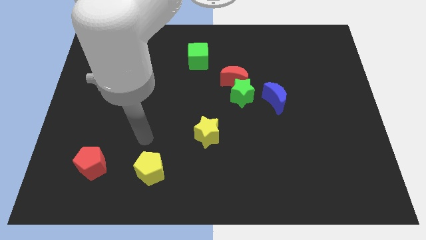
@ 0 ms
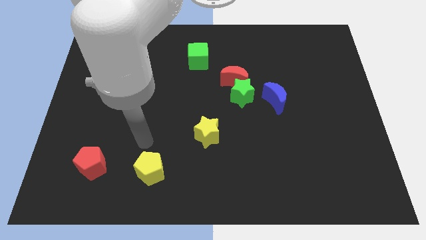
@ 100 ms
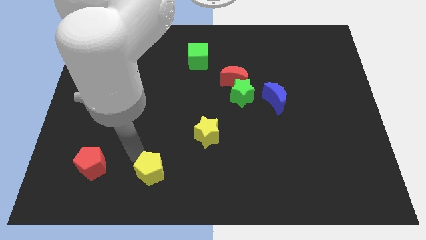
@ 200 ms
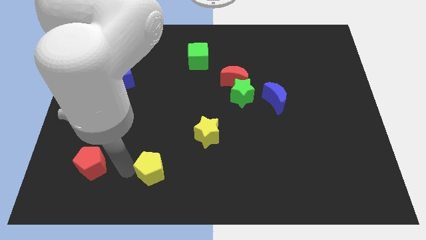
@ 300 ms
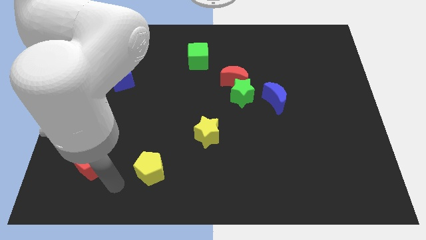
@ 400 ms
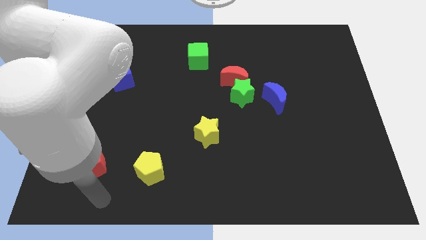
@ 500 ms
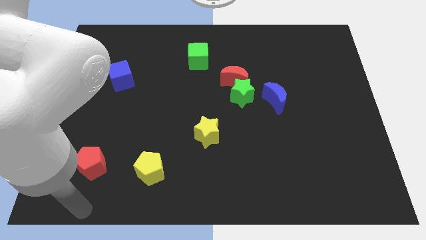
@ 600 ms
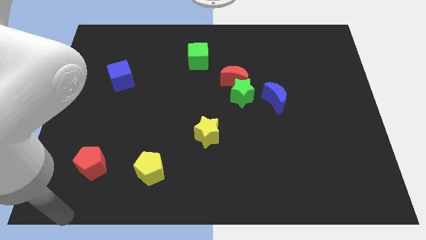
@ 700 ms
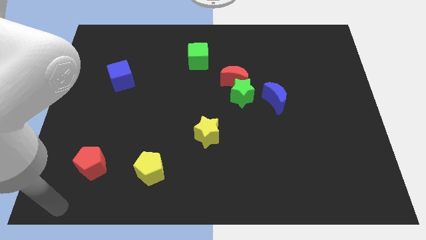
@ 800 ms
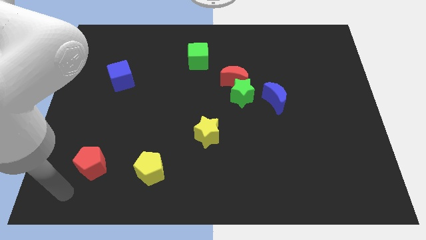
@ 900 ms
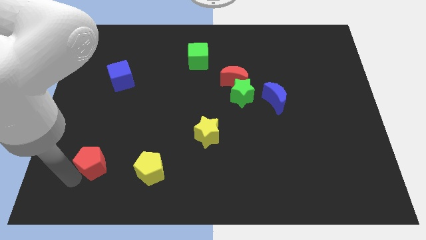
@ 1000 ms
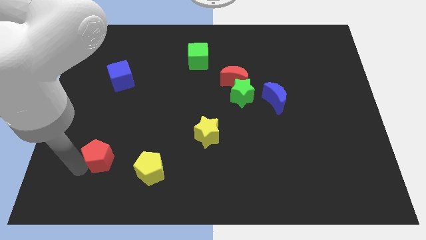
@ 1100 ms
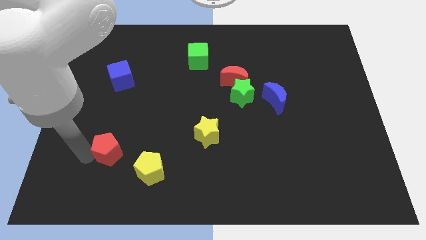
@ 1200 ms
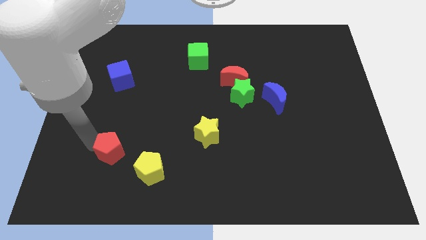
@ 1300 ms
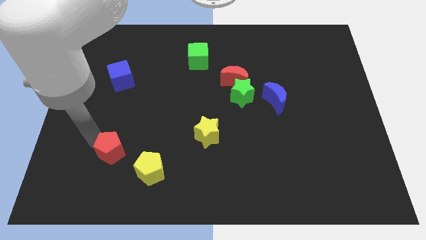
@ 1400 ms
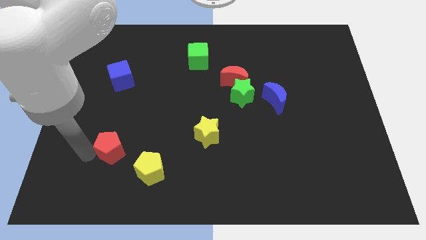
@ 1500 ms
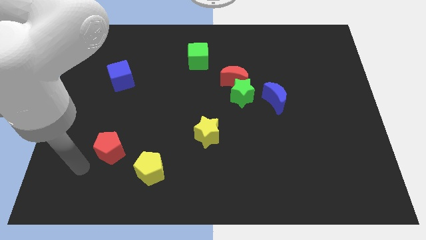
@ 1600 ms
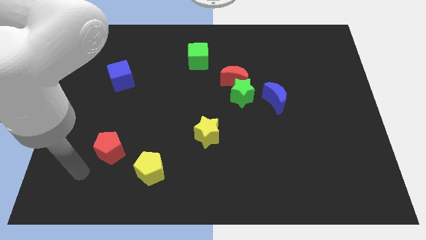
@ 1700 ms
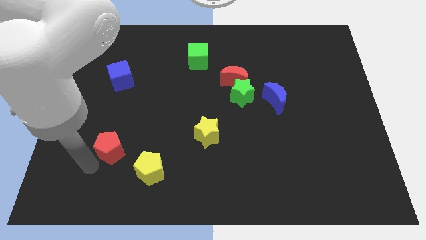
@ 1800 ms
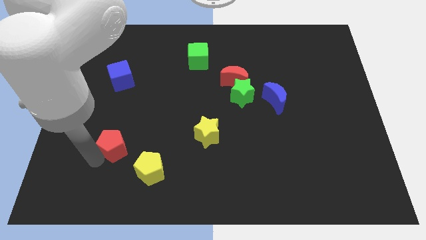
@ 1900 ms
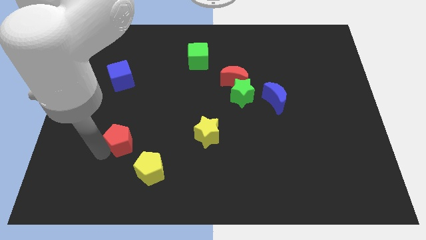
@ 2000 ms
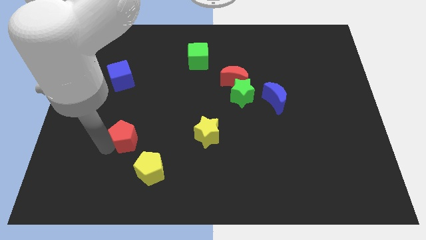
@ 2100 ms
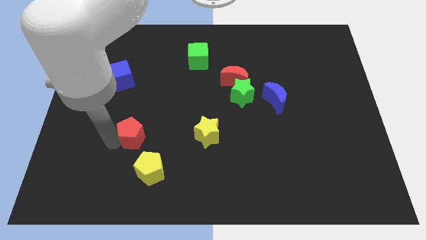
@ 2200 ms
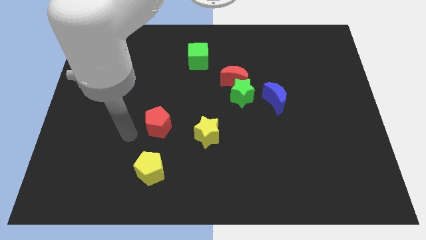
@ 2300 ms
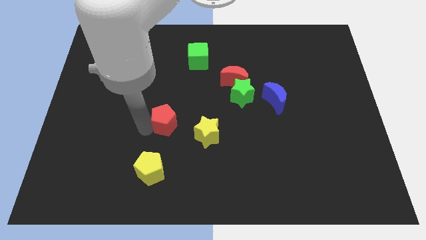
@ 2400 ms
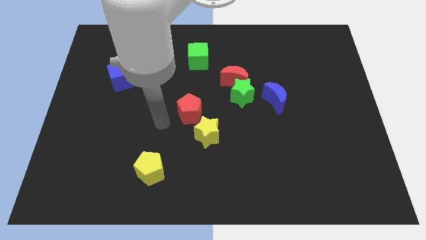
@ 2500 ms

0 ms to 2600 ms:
push the red pentagon close to the yellow star

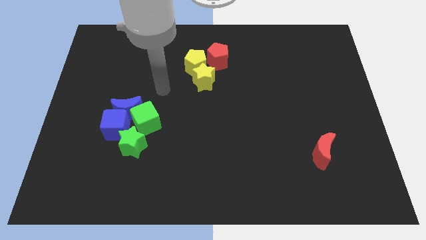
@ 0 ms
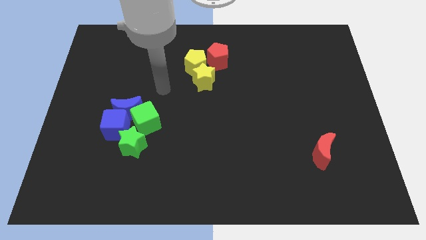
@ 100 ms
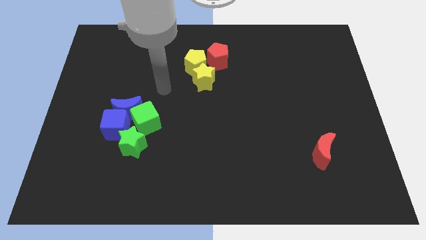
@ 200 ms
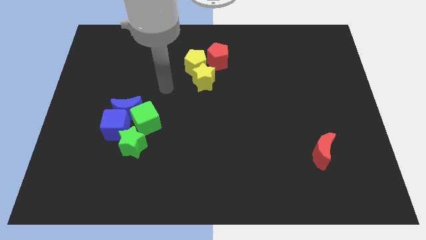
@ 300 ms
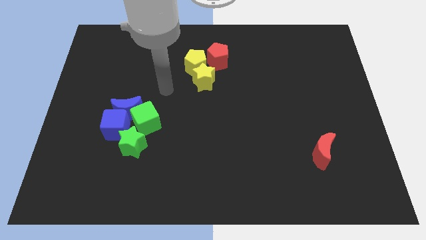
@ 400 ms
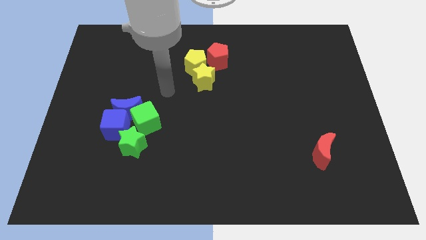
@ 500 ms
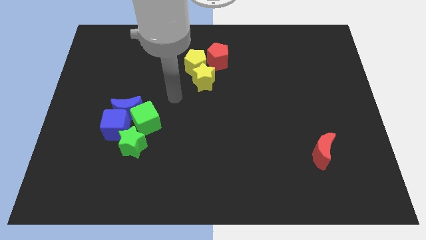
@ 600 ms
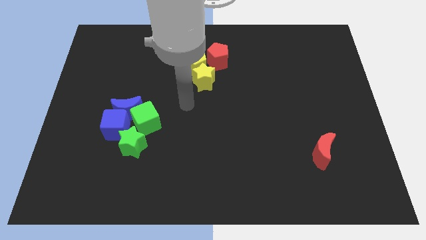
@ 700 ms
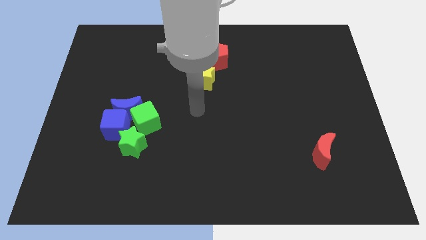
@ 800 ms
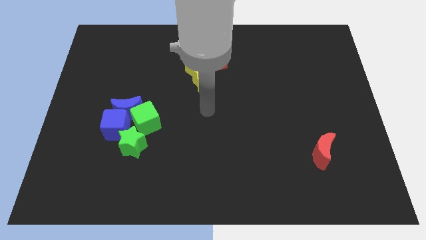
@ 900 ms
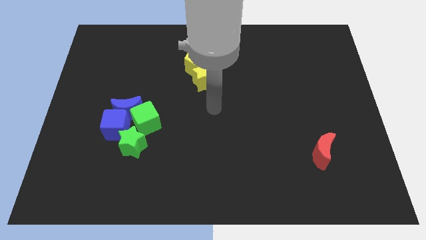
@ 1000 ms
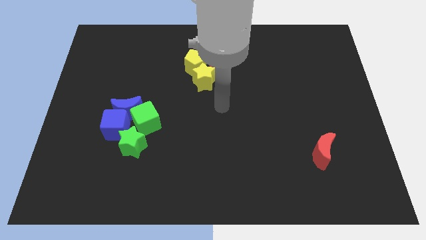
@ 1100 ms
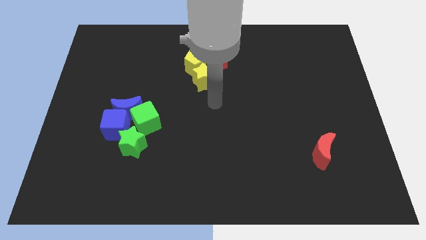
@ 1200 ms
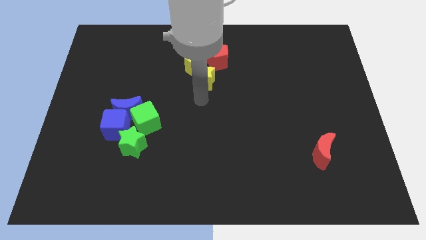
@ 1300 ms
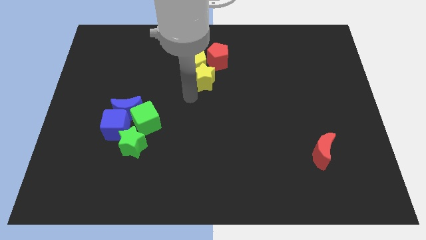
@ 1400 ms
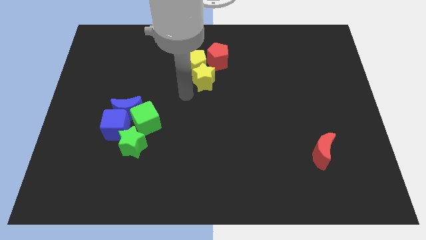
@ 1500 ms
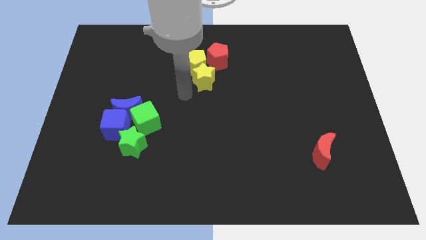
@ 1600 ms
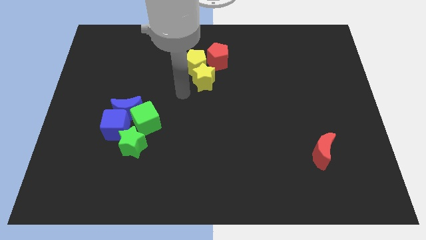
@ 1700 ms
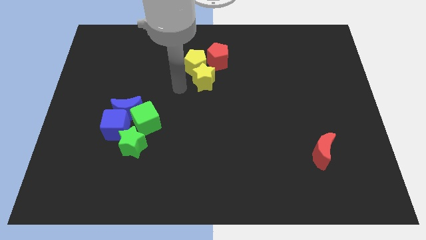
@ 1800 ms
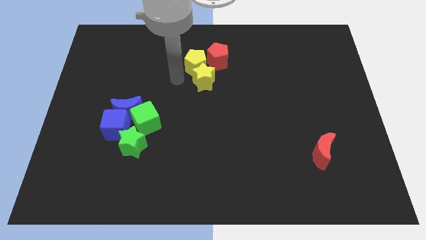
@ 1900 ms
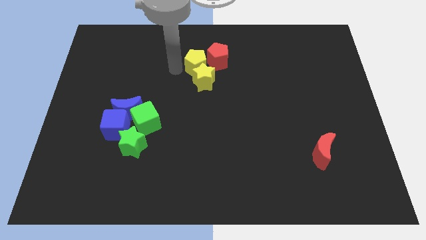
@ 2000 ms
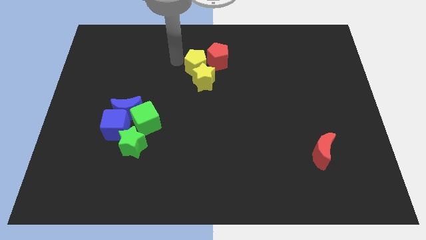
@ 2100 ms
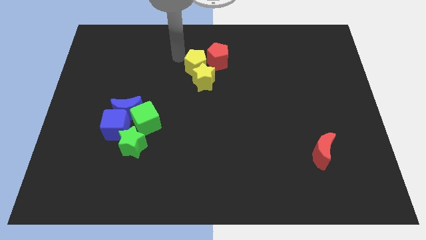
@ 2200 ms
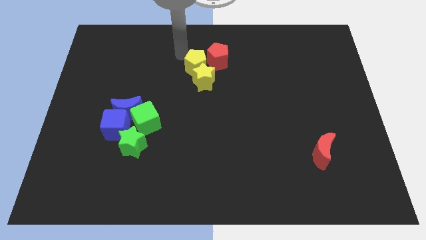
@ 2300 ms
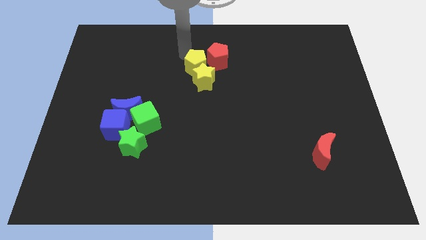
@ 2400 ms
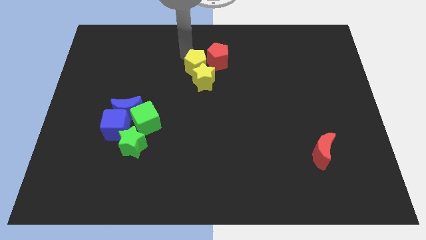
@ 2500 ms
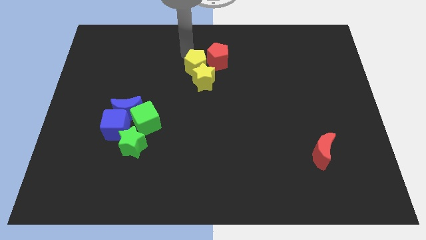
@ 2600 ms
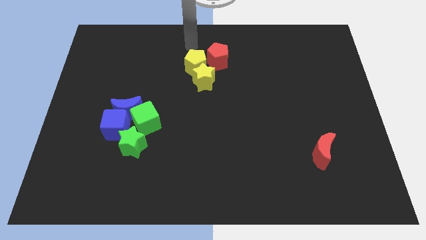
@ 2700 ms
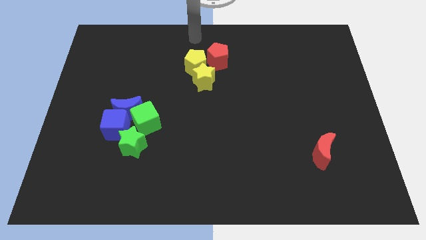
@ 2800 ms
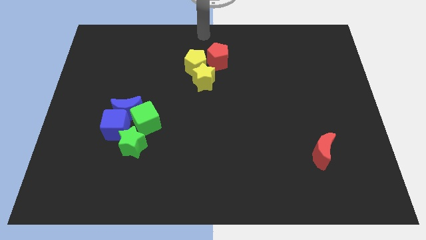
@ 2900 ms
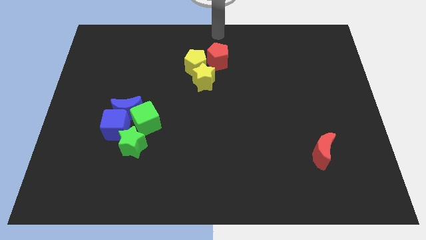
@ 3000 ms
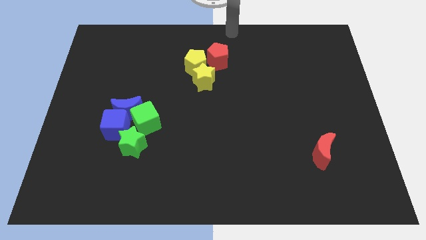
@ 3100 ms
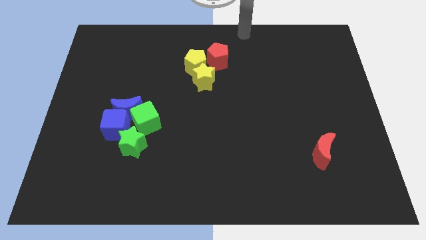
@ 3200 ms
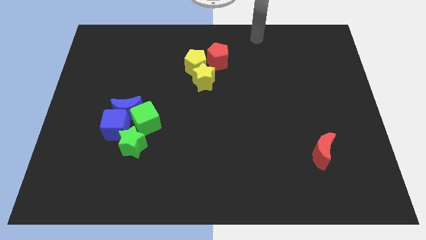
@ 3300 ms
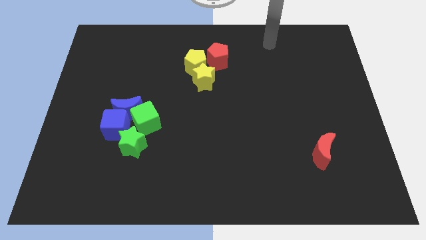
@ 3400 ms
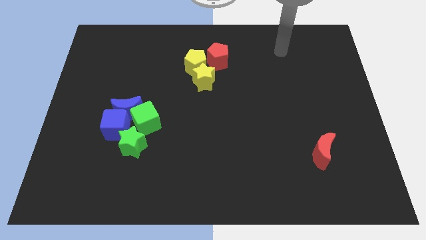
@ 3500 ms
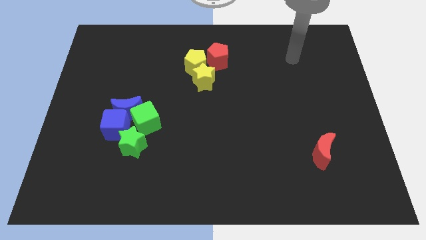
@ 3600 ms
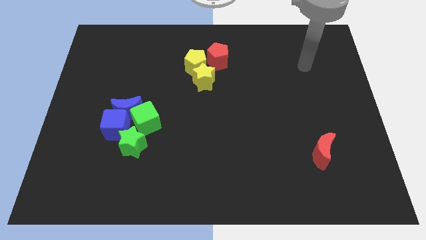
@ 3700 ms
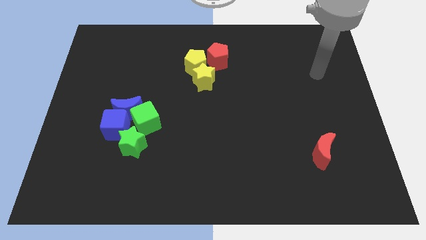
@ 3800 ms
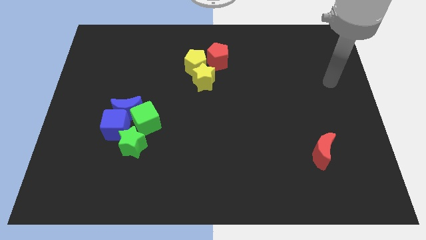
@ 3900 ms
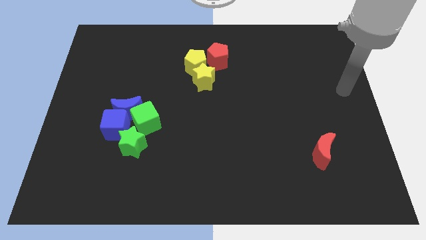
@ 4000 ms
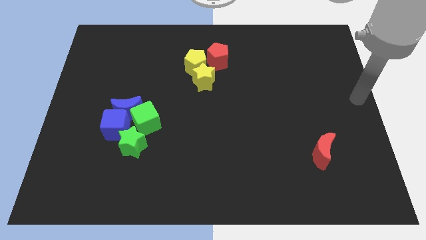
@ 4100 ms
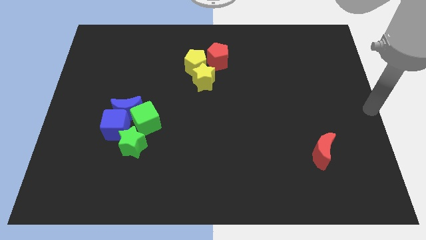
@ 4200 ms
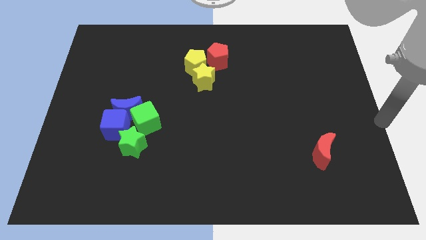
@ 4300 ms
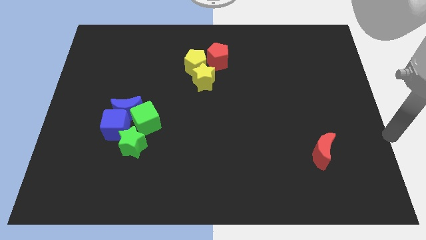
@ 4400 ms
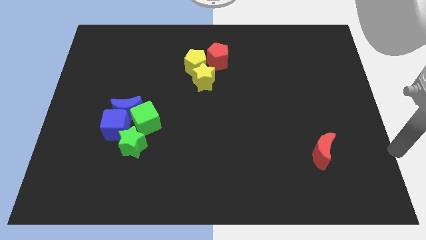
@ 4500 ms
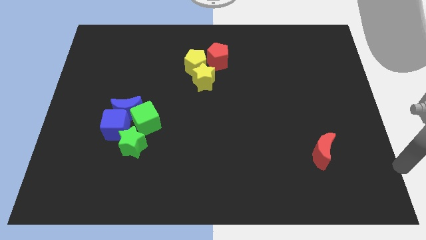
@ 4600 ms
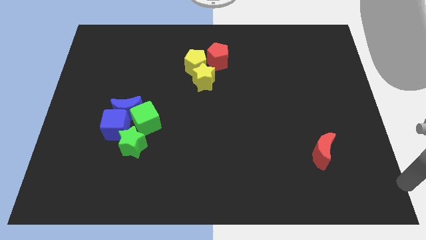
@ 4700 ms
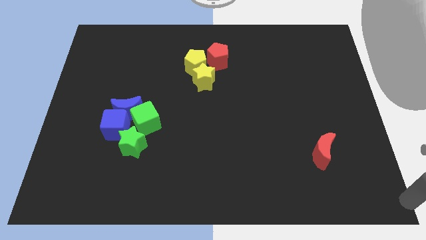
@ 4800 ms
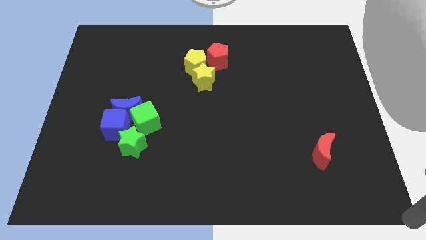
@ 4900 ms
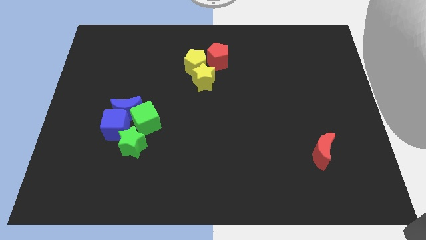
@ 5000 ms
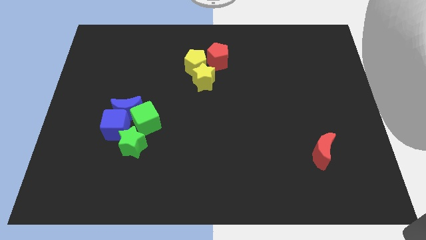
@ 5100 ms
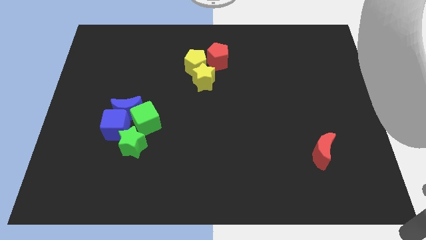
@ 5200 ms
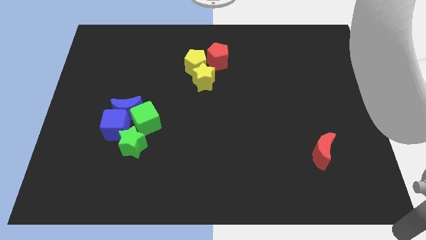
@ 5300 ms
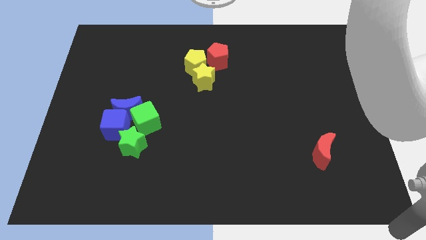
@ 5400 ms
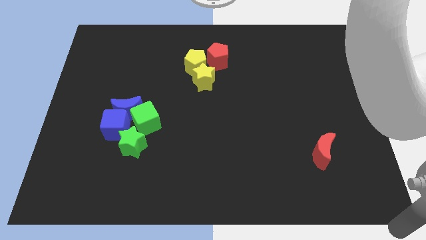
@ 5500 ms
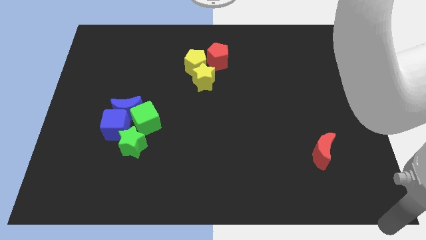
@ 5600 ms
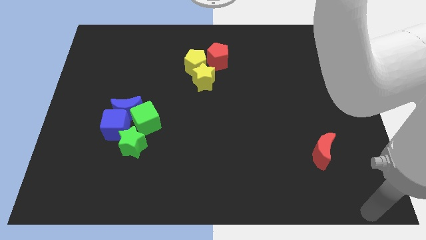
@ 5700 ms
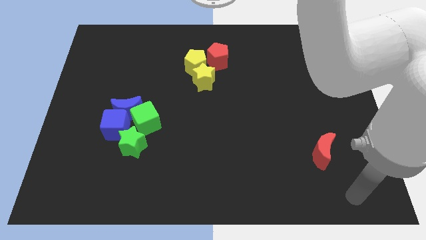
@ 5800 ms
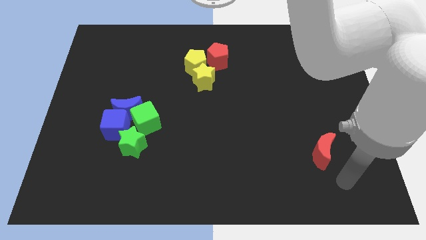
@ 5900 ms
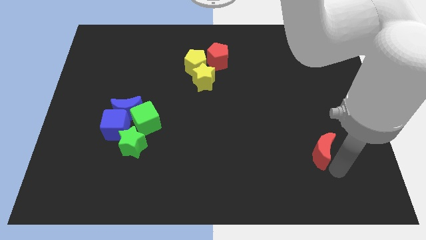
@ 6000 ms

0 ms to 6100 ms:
move the arm to the red crescent

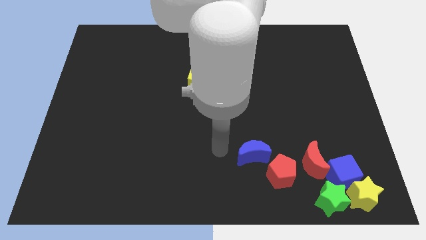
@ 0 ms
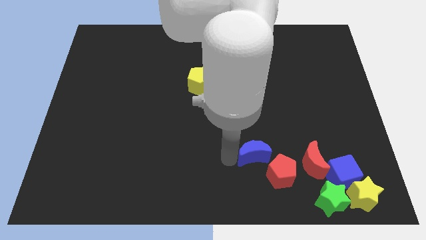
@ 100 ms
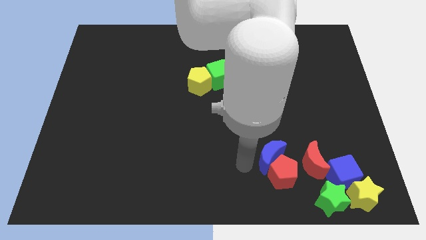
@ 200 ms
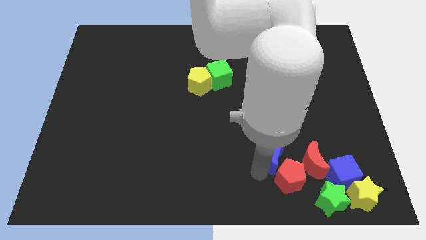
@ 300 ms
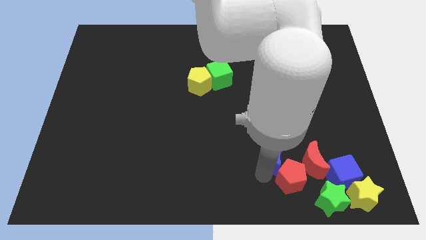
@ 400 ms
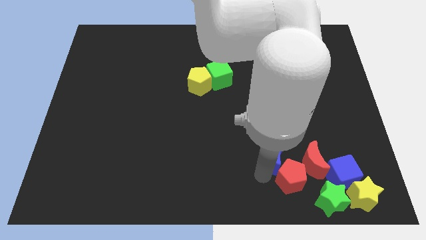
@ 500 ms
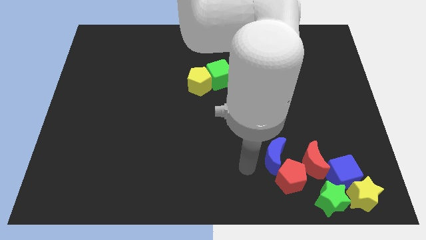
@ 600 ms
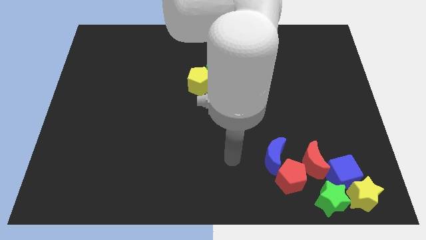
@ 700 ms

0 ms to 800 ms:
move the red pentagon with the blue moon
